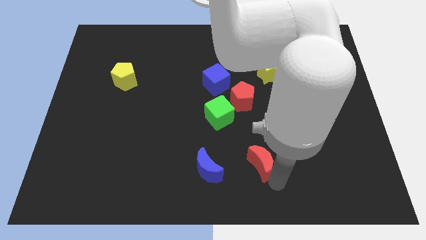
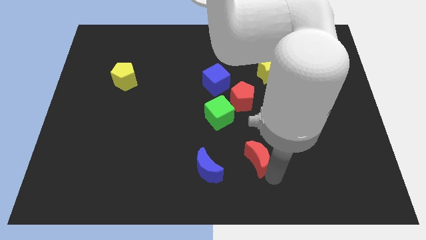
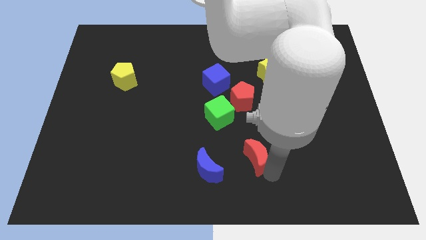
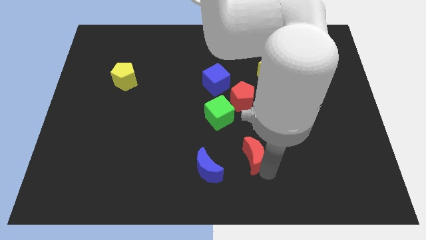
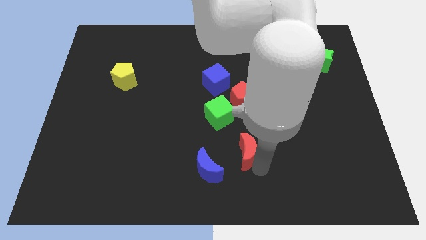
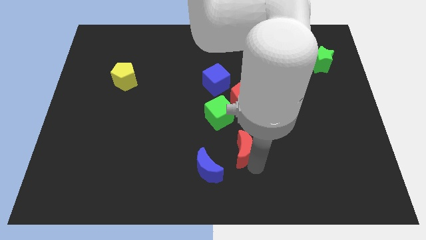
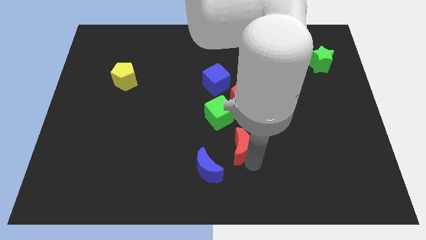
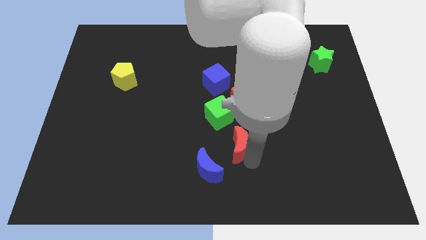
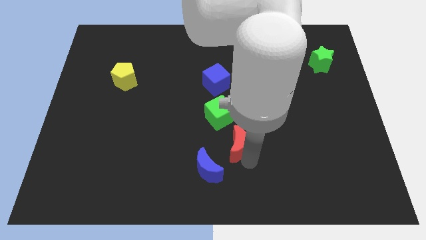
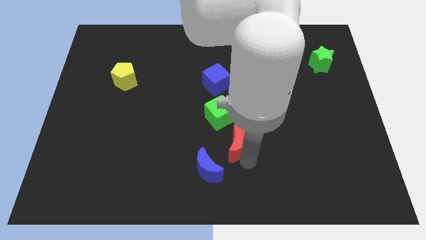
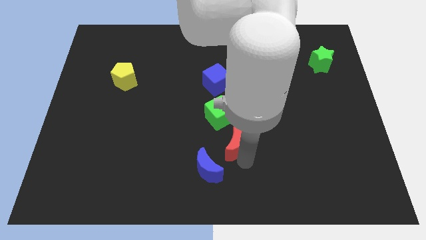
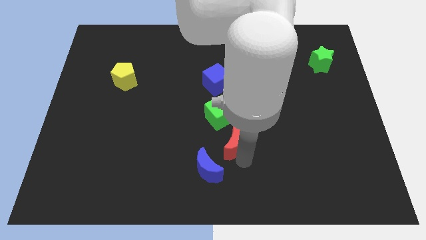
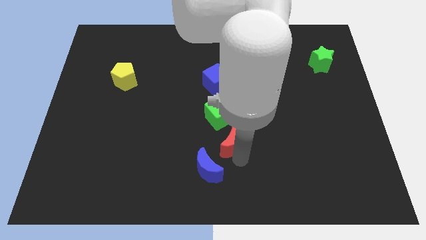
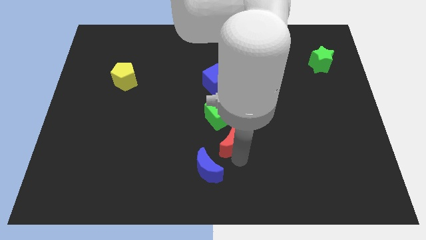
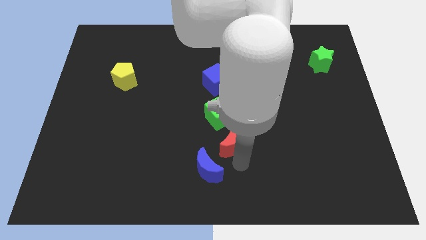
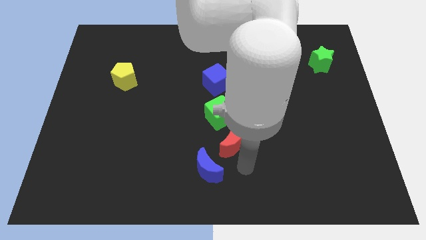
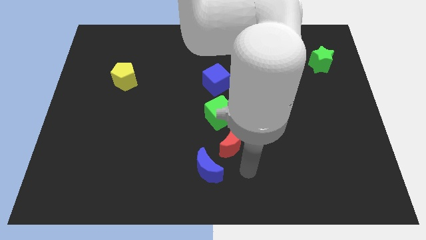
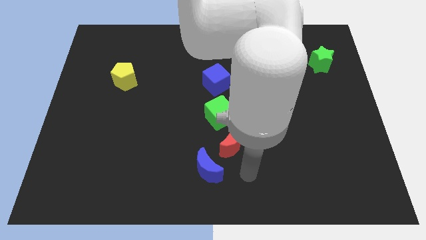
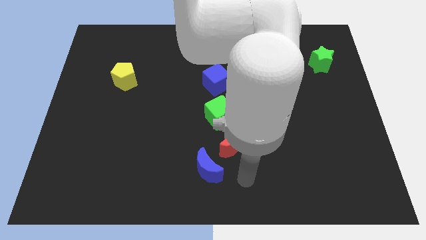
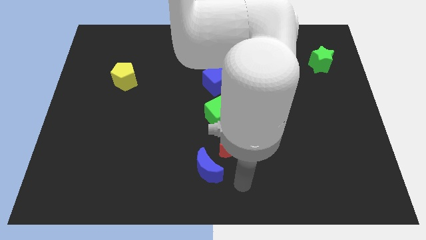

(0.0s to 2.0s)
move the red crescent slight right below to the green cube

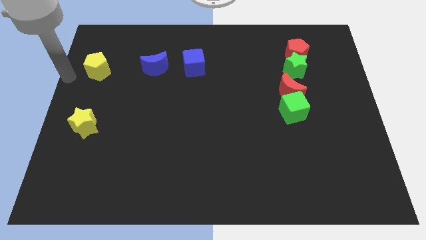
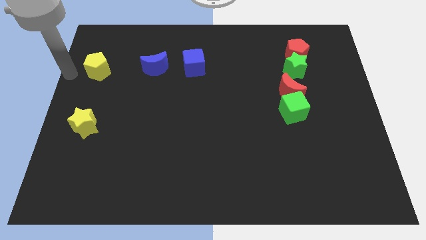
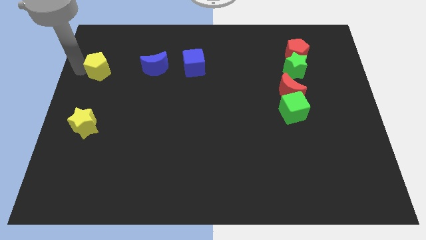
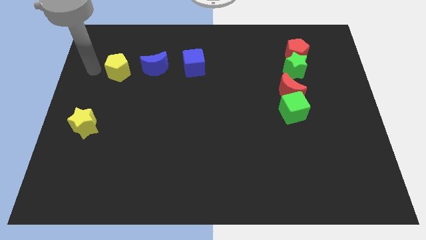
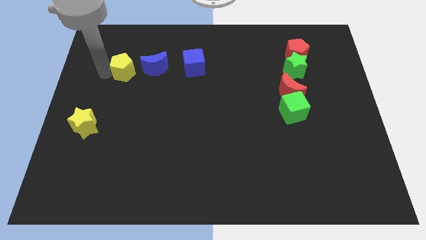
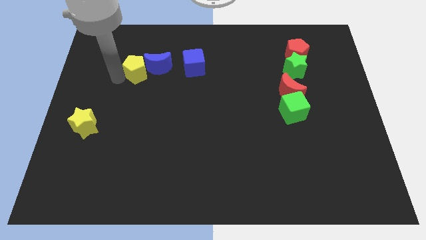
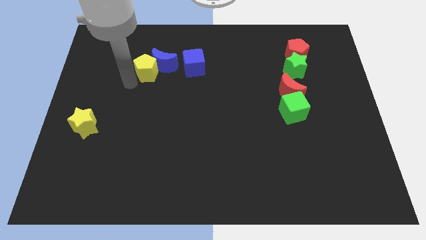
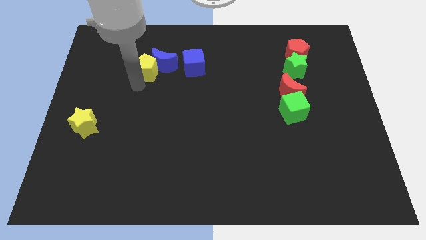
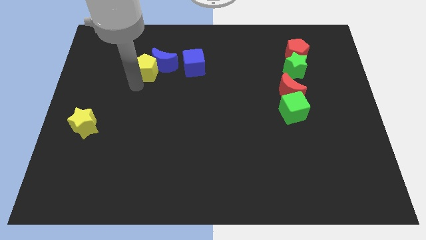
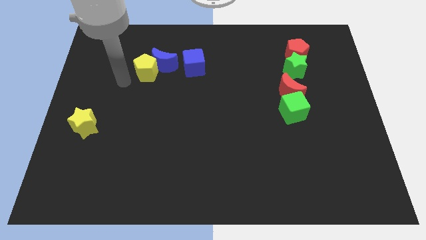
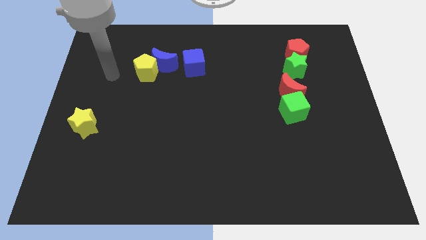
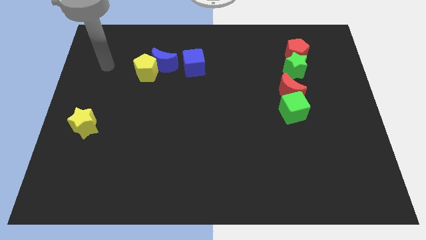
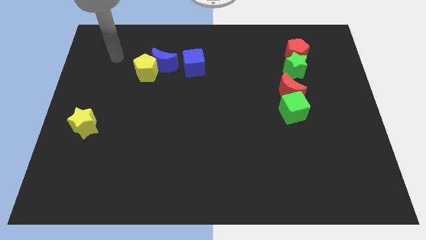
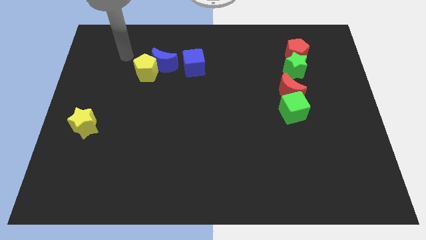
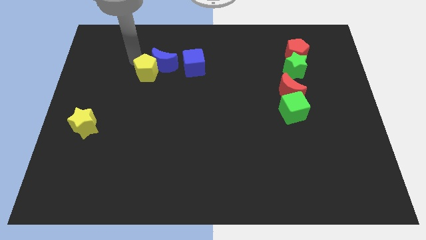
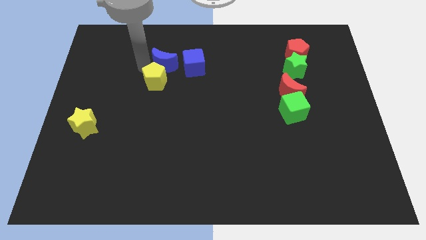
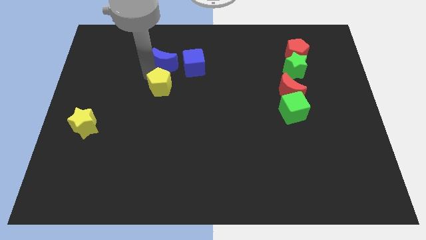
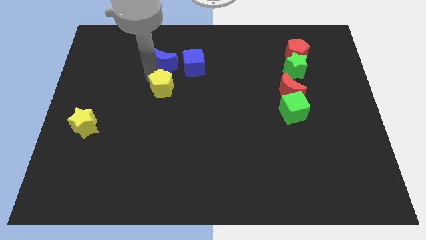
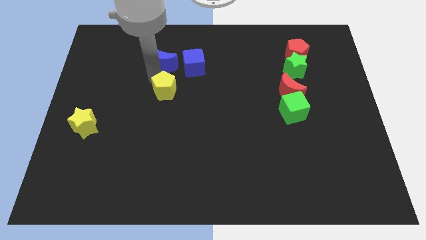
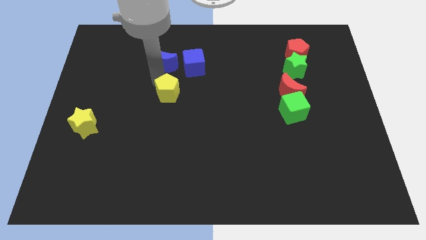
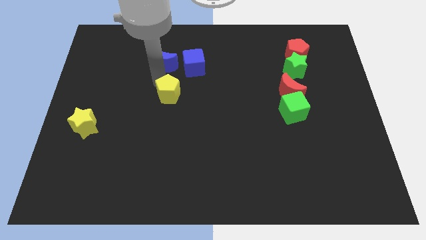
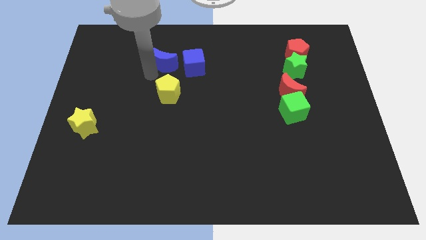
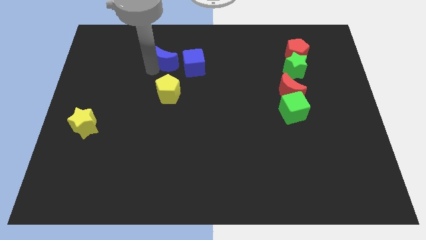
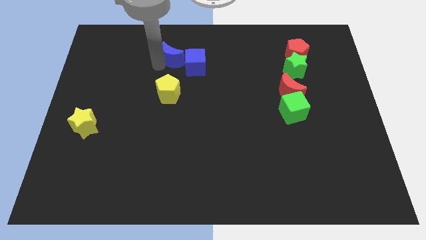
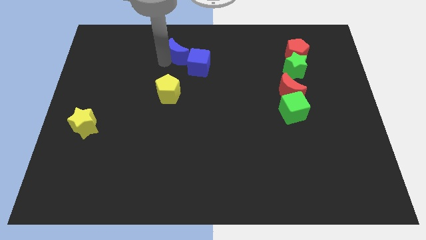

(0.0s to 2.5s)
place the yellow pentagon below the blue moon

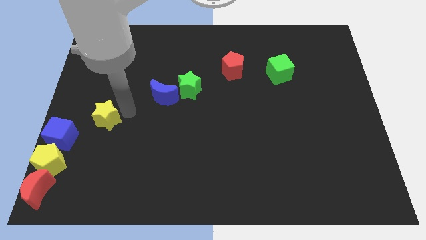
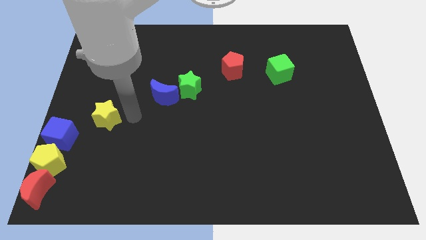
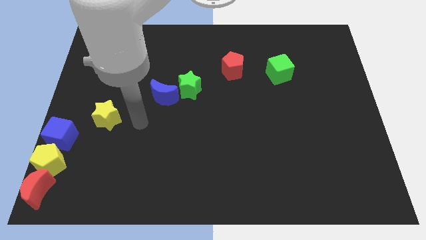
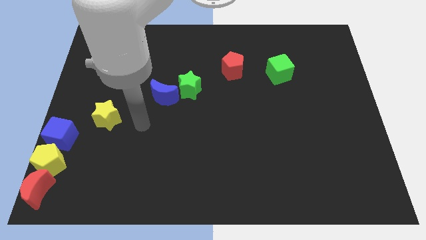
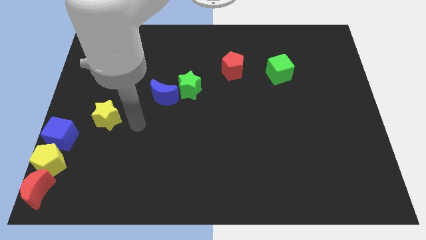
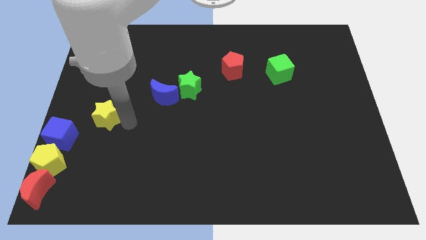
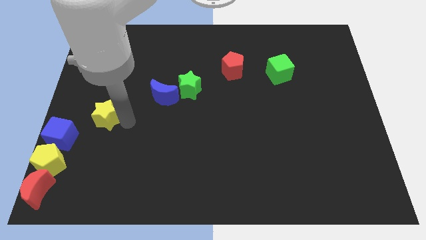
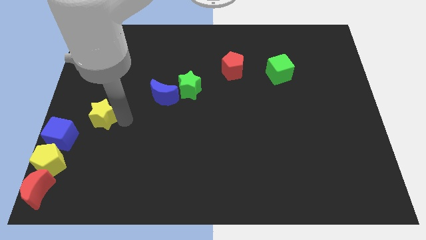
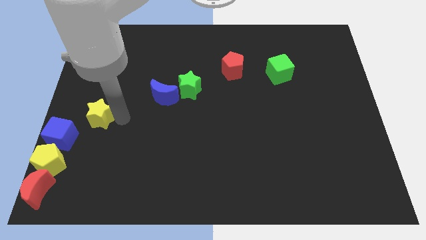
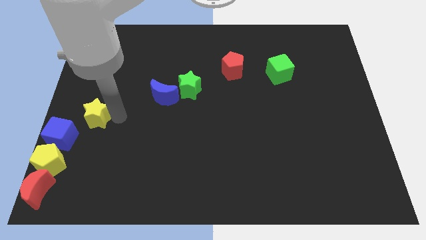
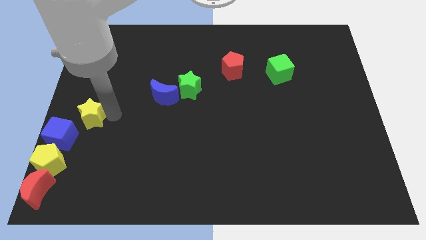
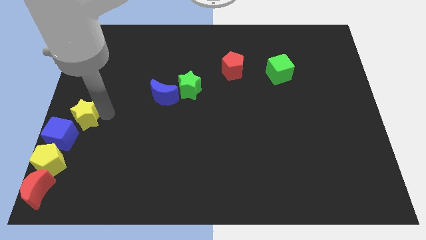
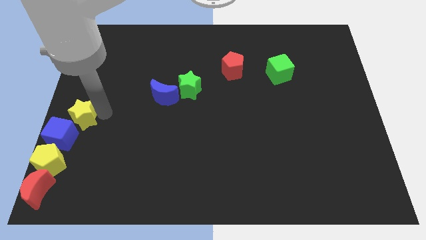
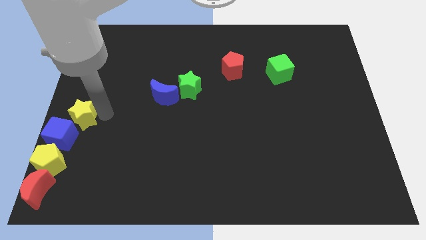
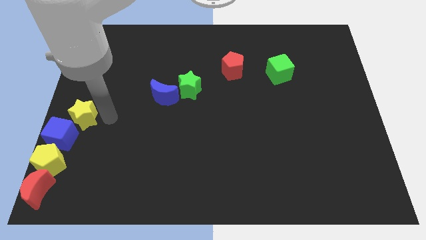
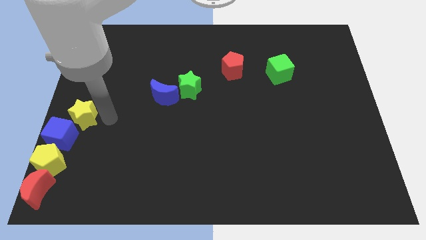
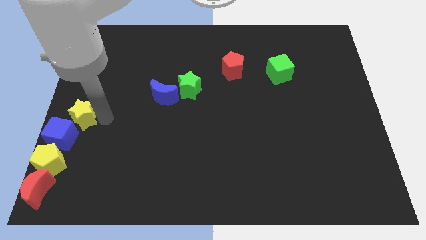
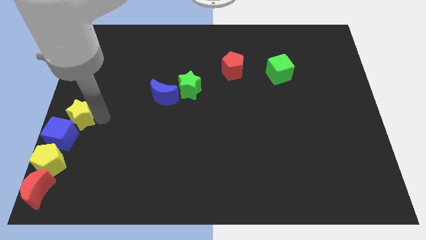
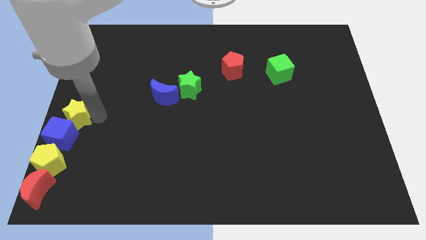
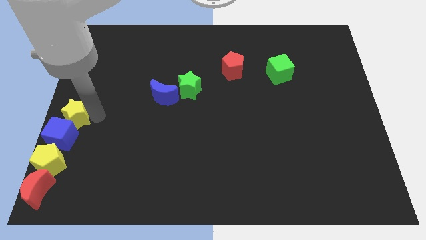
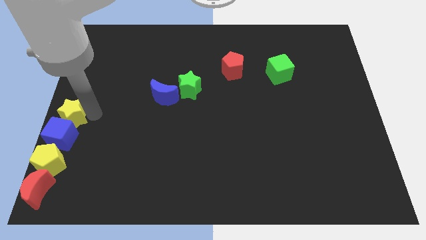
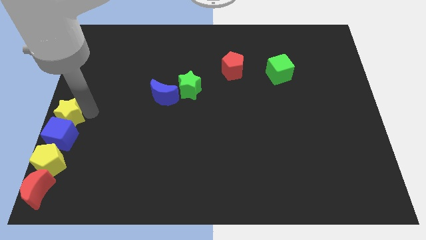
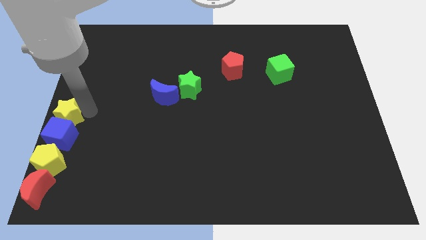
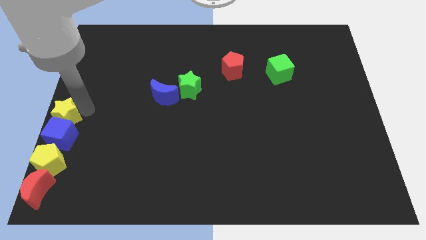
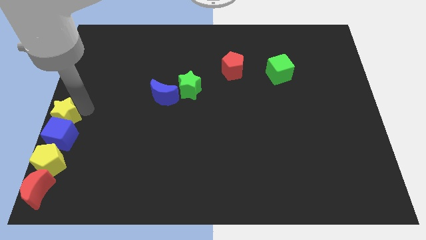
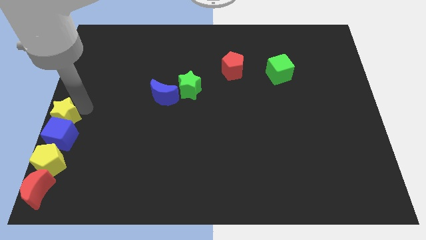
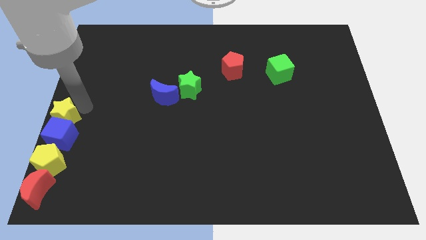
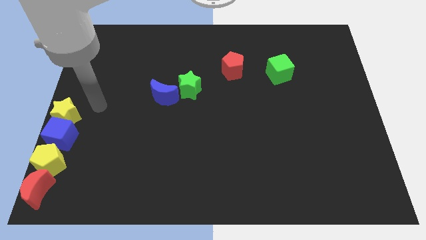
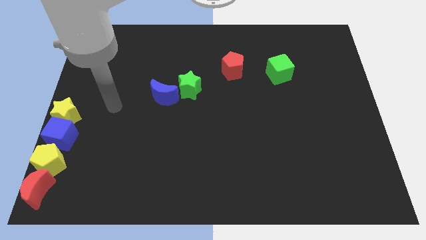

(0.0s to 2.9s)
move the yellow star above to the blue cube

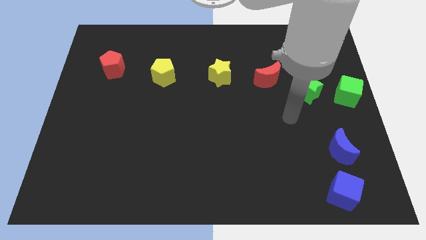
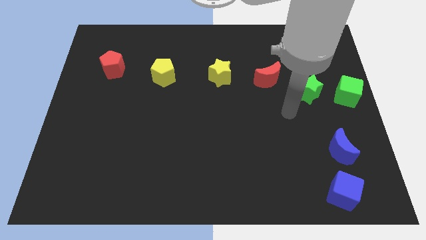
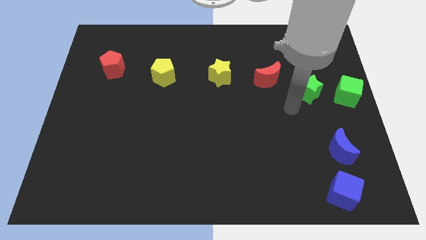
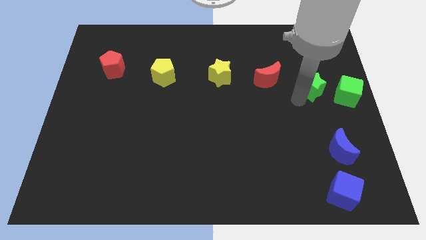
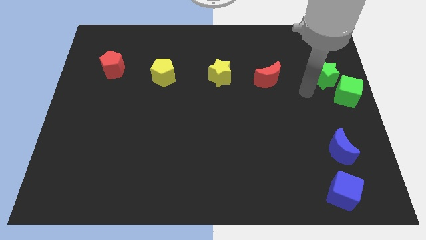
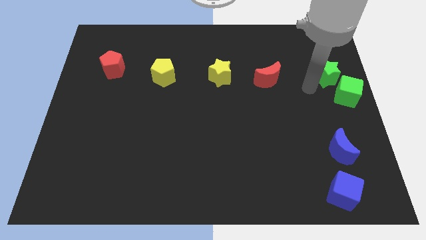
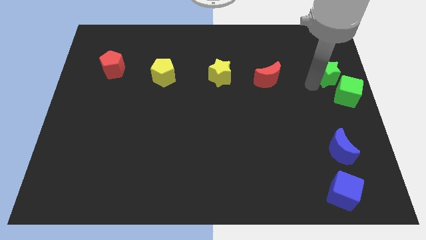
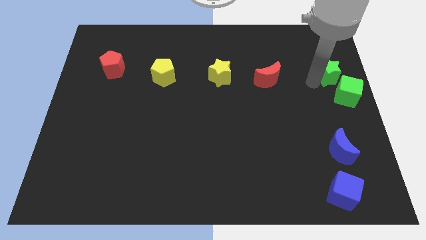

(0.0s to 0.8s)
move the green star close to the green cube

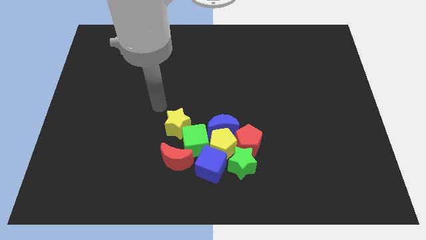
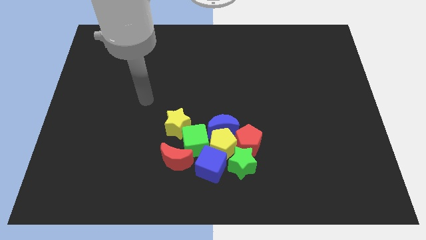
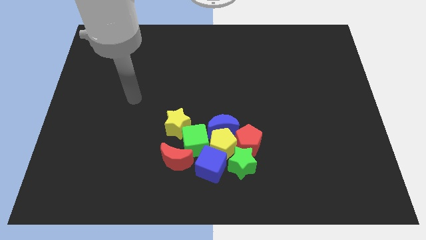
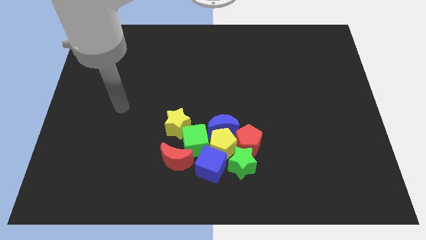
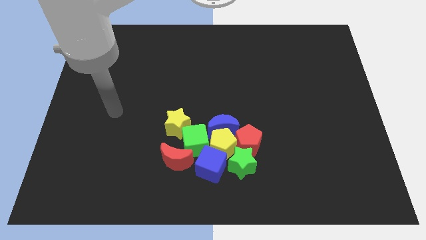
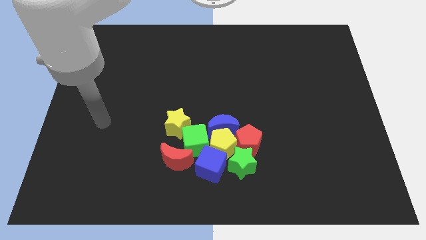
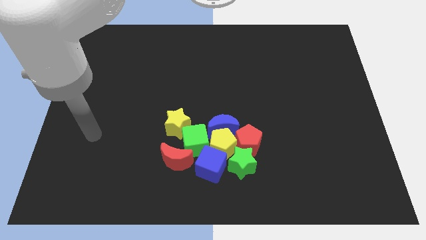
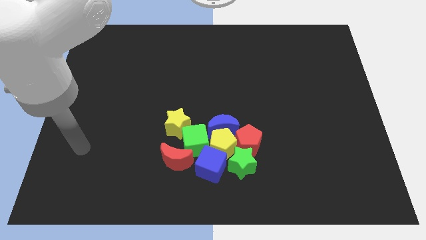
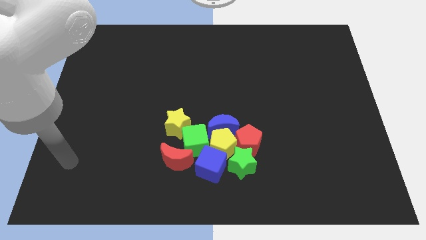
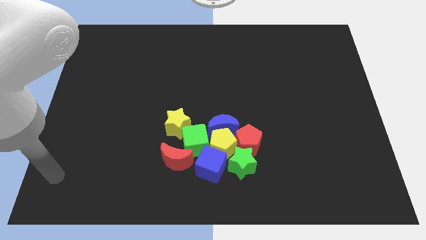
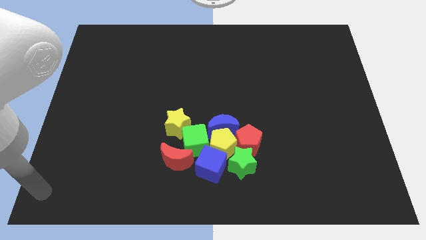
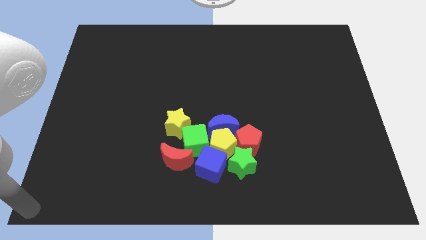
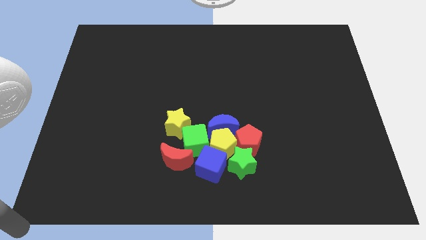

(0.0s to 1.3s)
place the arm at the bottom left corner of the board
